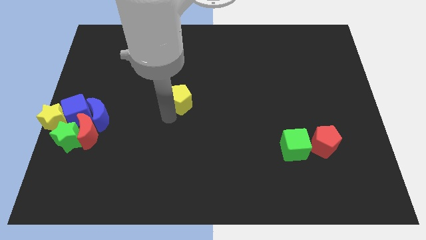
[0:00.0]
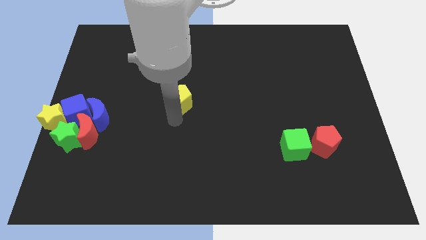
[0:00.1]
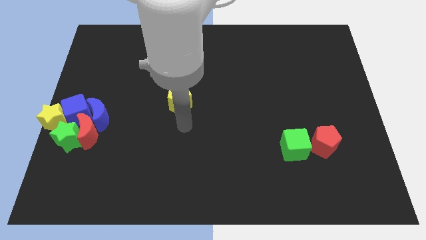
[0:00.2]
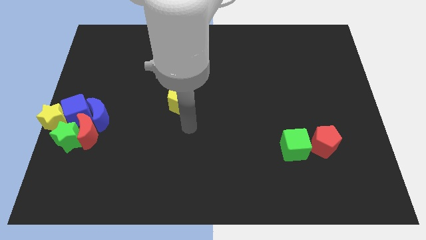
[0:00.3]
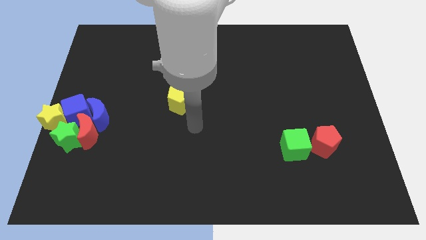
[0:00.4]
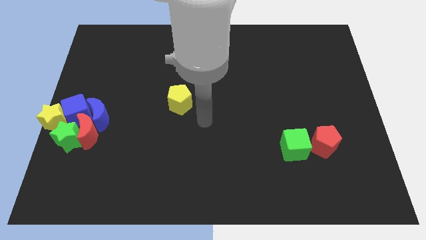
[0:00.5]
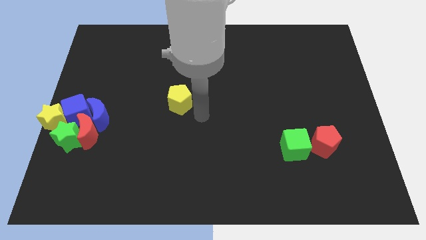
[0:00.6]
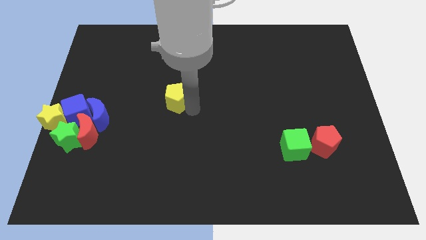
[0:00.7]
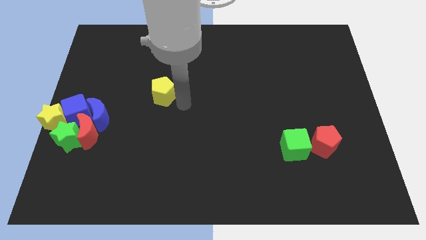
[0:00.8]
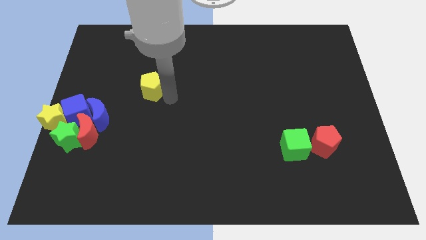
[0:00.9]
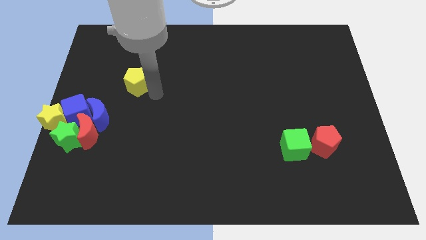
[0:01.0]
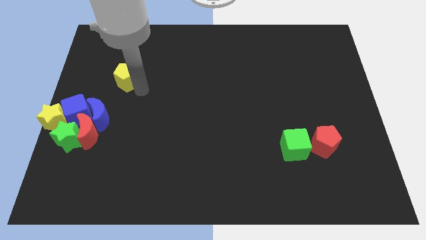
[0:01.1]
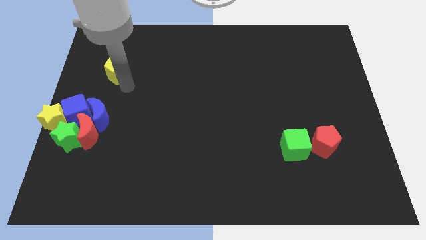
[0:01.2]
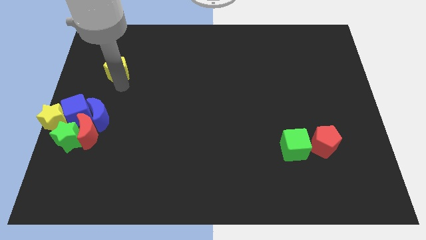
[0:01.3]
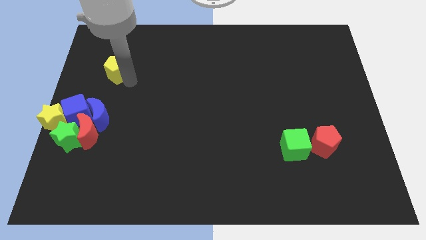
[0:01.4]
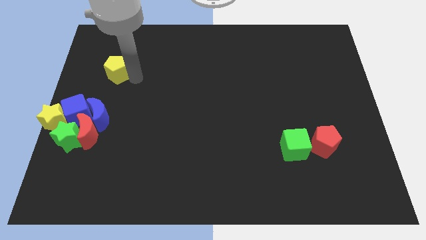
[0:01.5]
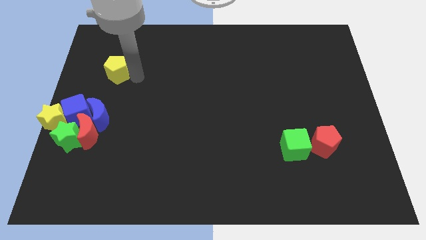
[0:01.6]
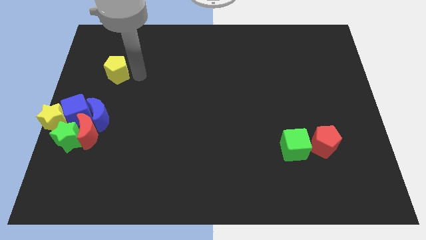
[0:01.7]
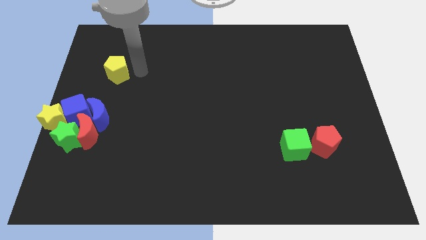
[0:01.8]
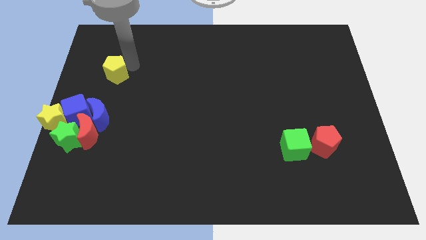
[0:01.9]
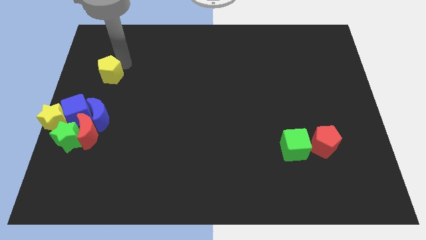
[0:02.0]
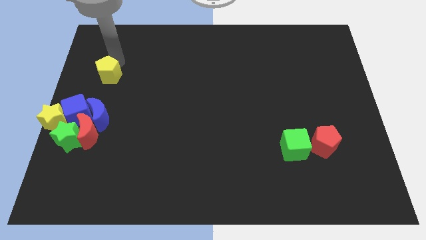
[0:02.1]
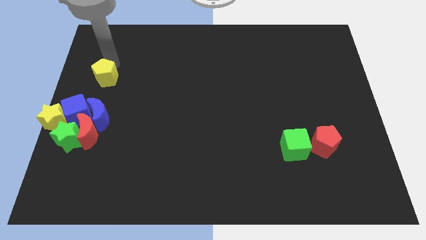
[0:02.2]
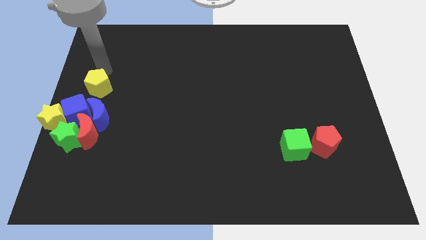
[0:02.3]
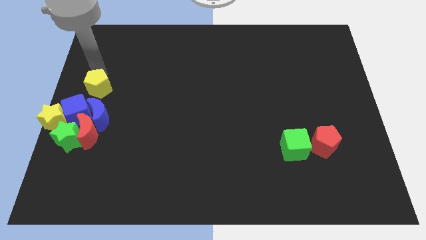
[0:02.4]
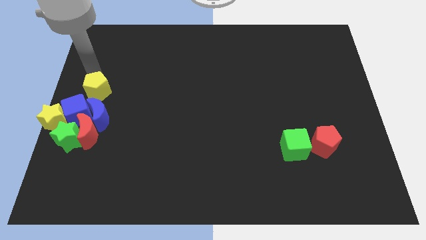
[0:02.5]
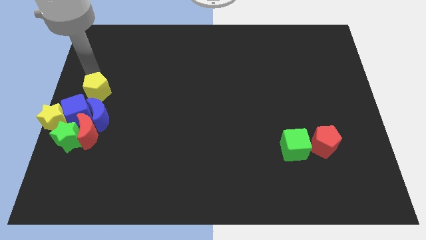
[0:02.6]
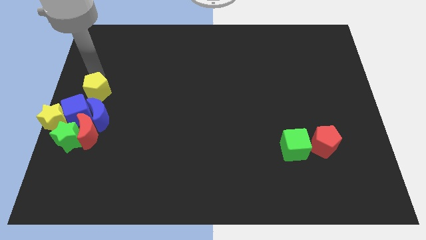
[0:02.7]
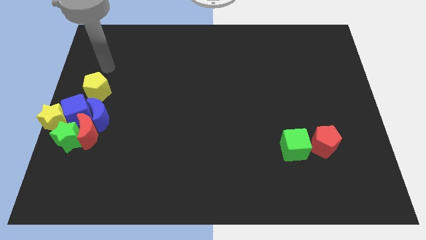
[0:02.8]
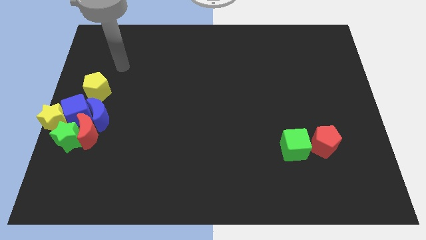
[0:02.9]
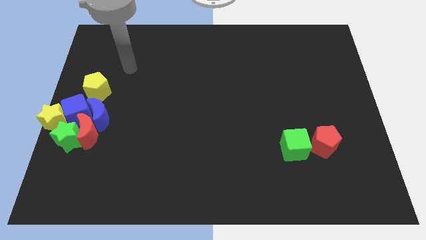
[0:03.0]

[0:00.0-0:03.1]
place yellow pentagon above blue moon

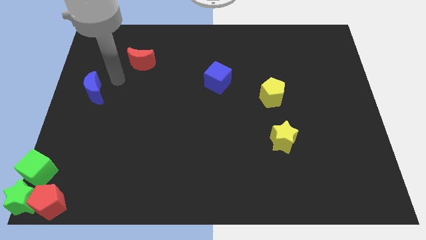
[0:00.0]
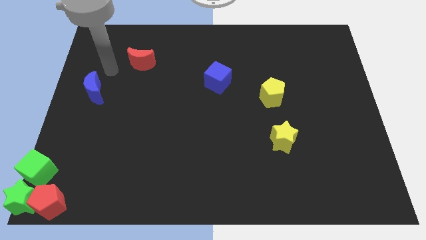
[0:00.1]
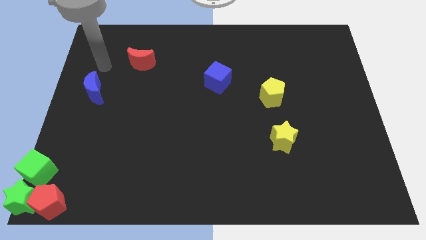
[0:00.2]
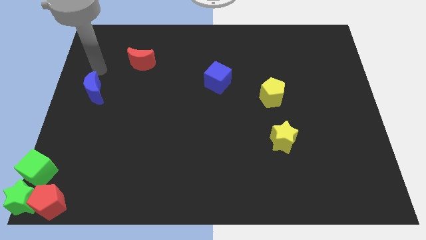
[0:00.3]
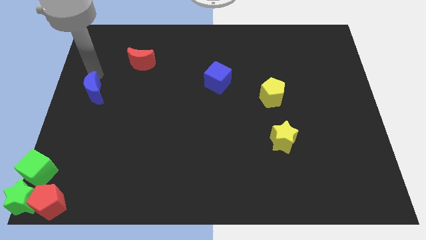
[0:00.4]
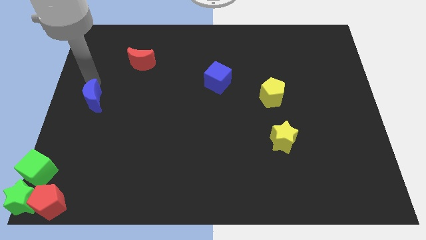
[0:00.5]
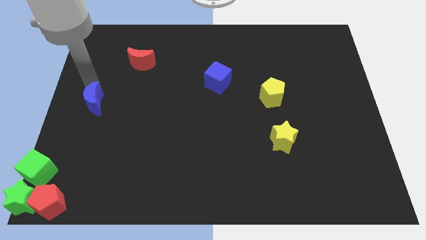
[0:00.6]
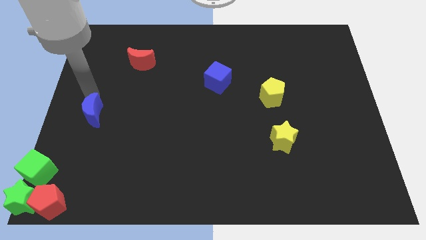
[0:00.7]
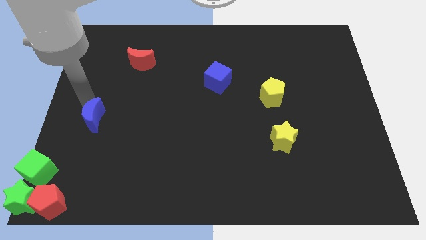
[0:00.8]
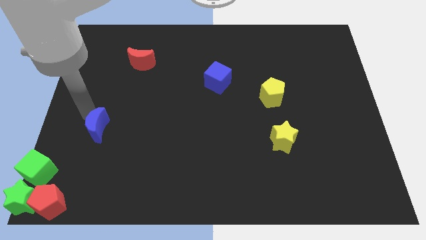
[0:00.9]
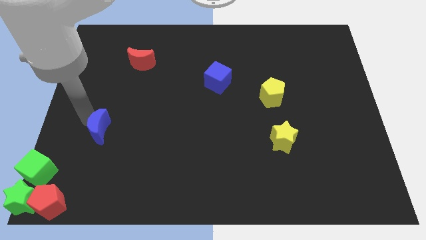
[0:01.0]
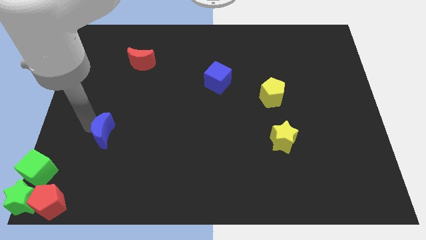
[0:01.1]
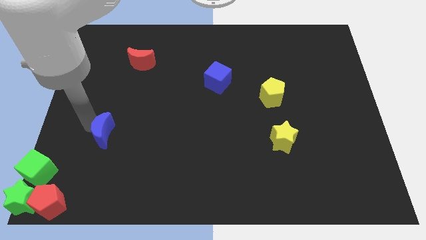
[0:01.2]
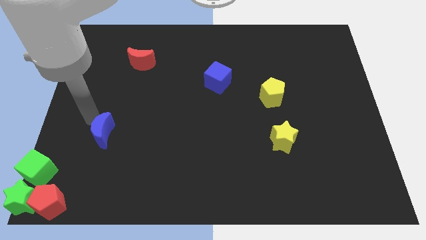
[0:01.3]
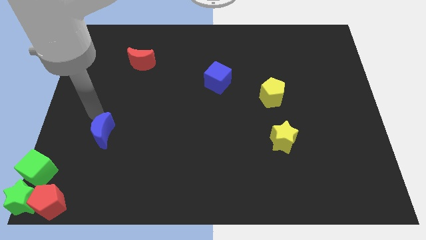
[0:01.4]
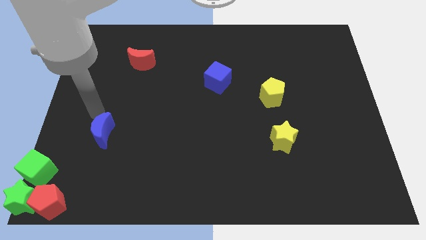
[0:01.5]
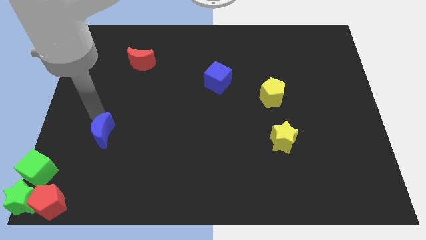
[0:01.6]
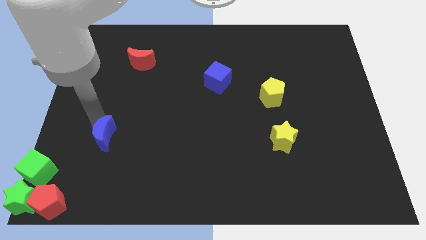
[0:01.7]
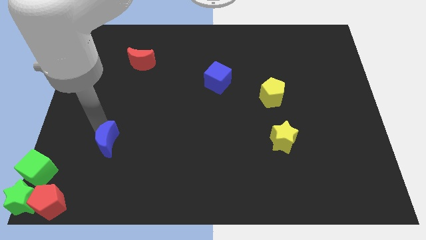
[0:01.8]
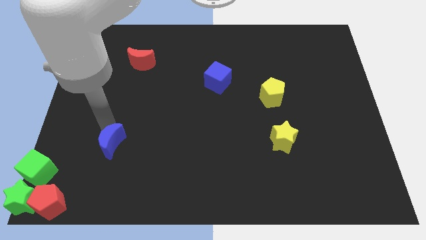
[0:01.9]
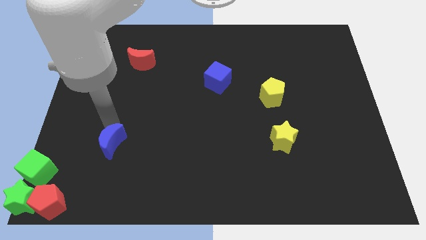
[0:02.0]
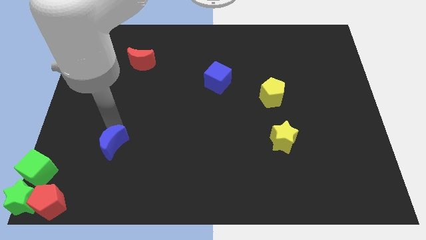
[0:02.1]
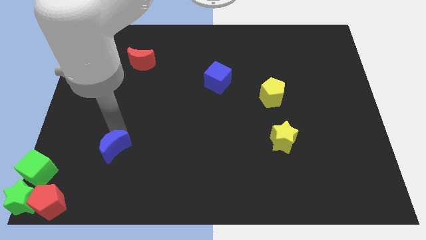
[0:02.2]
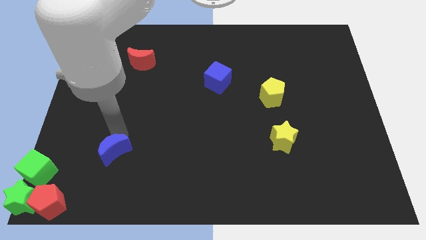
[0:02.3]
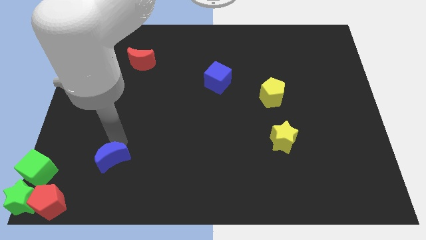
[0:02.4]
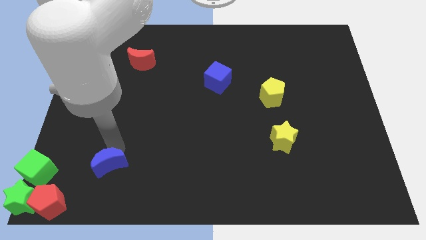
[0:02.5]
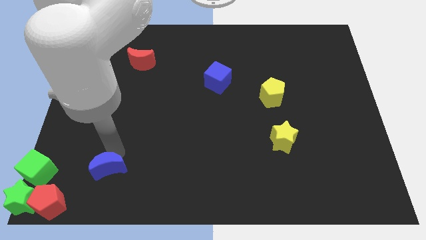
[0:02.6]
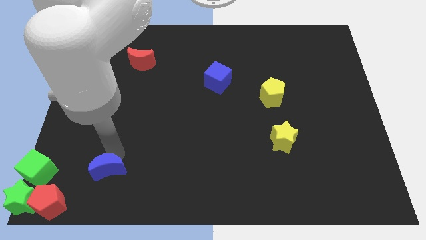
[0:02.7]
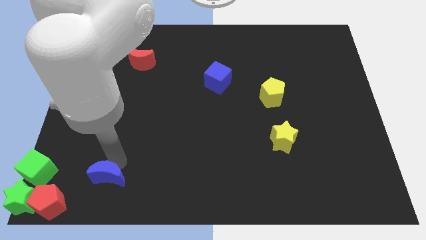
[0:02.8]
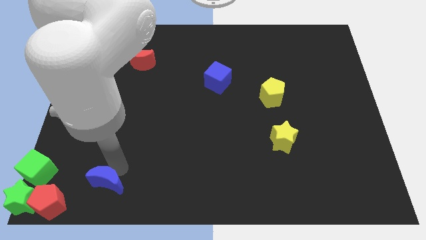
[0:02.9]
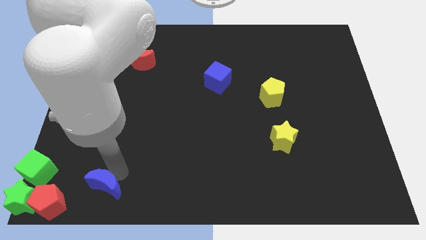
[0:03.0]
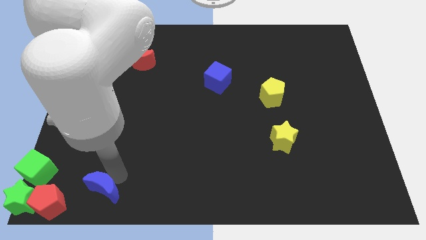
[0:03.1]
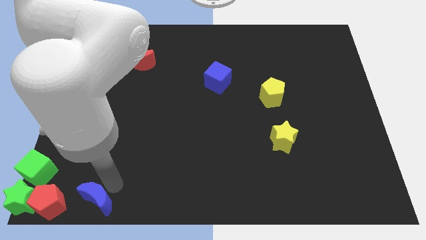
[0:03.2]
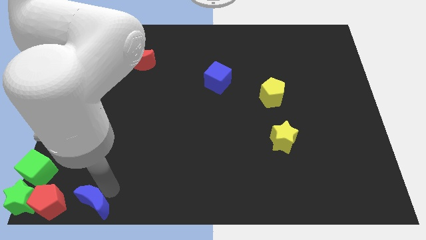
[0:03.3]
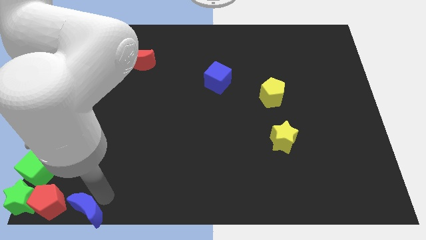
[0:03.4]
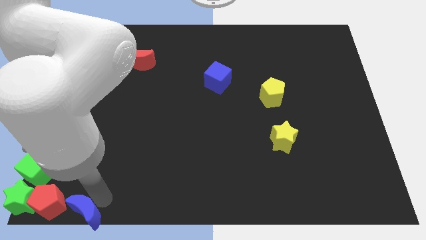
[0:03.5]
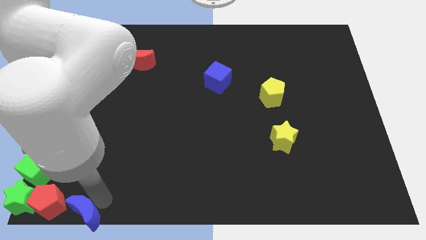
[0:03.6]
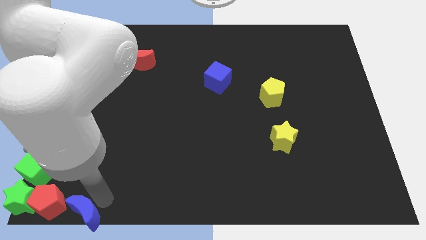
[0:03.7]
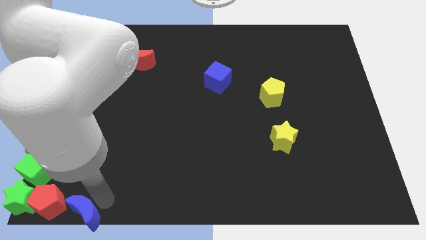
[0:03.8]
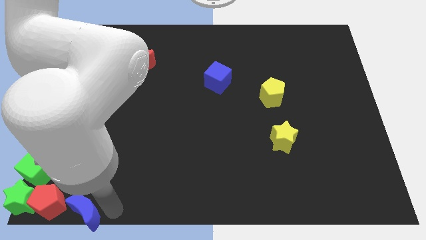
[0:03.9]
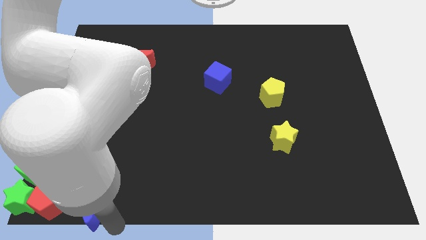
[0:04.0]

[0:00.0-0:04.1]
place the blue moon right to the red pentagon

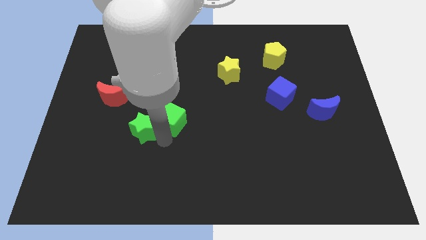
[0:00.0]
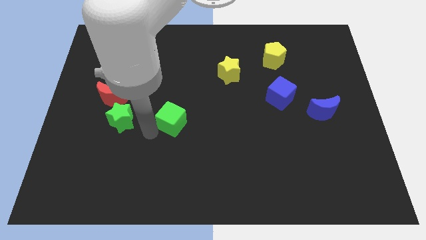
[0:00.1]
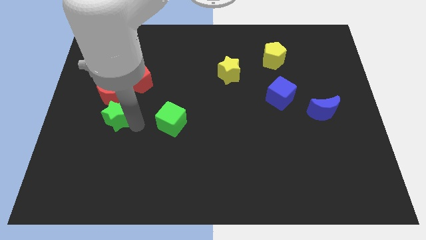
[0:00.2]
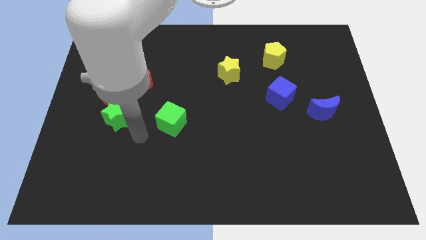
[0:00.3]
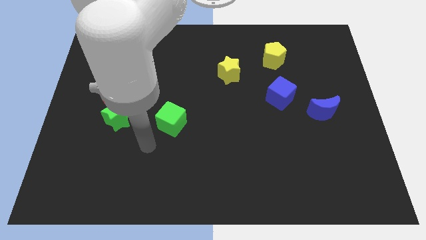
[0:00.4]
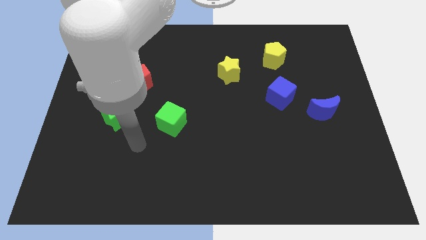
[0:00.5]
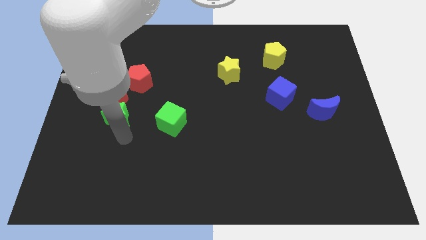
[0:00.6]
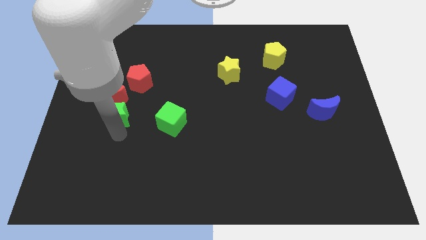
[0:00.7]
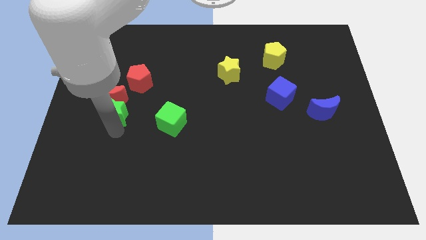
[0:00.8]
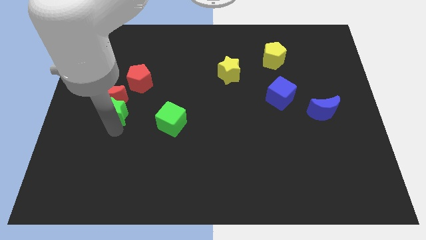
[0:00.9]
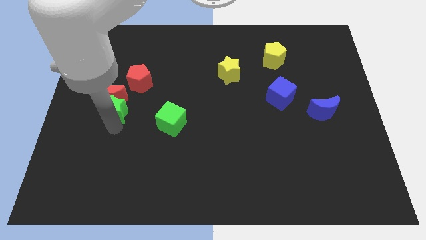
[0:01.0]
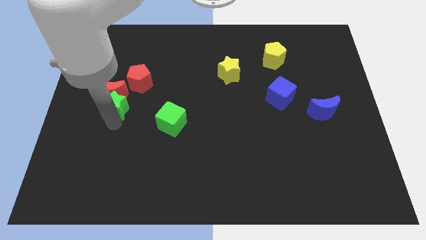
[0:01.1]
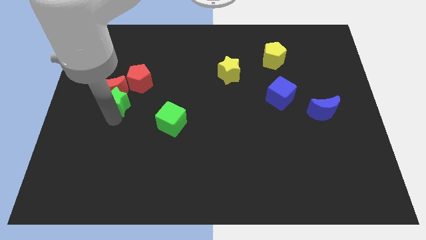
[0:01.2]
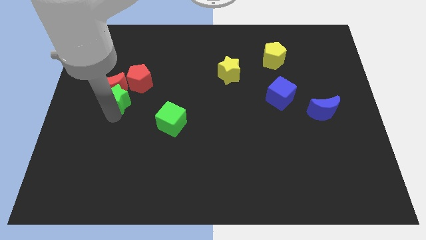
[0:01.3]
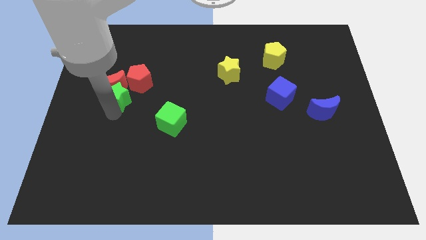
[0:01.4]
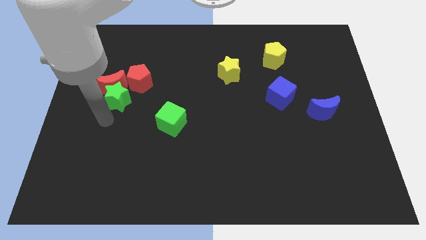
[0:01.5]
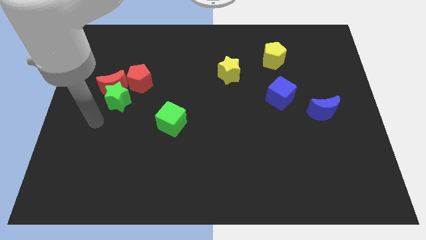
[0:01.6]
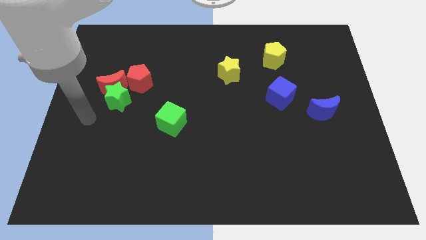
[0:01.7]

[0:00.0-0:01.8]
move green star and red moon towards top

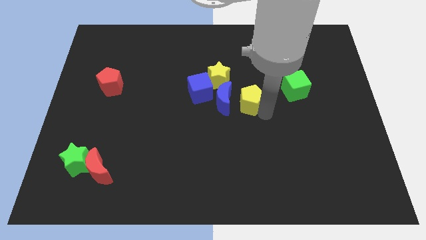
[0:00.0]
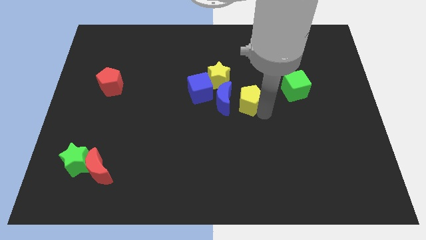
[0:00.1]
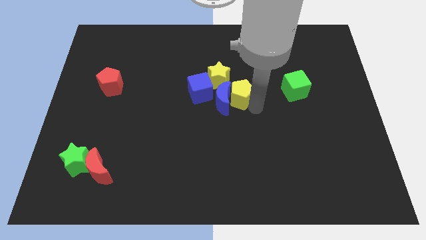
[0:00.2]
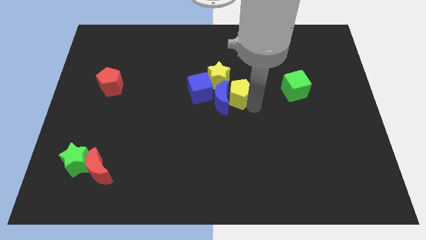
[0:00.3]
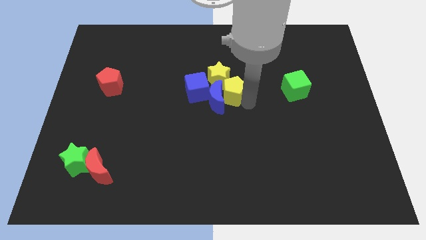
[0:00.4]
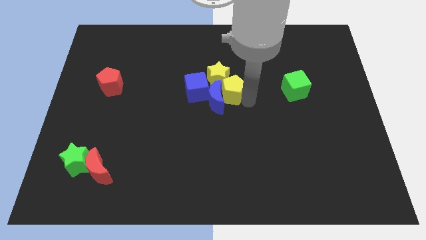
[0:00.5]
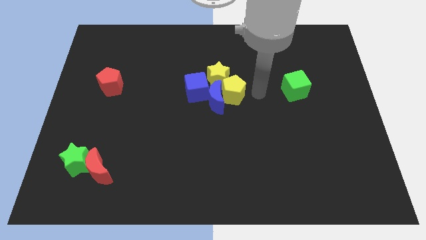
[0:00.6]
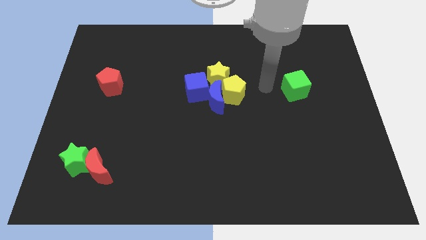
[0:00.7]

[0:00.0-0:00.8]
move the yellow block into the group of blocks to the center of the board
